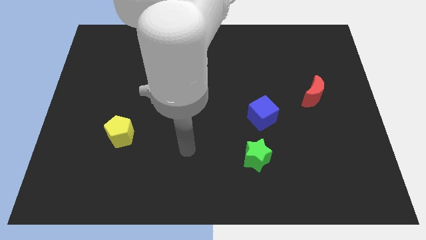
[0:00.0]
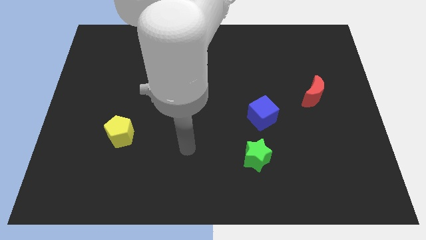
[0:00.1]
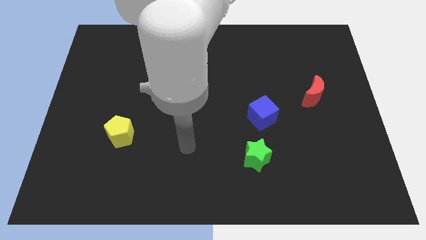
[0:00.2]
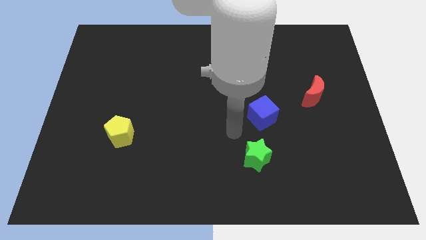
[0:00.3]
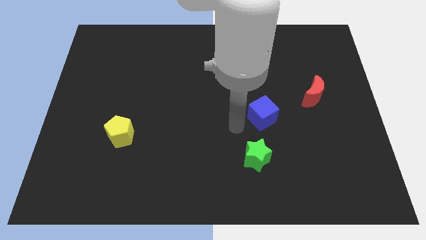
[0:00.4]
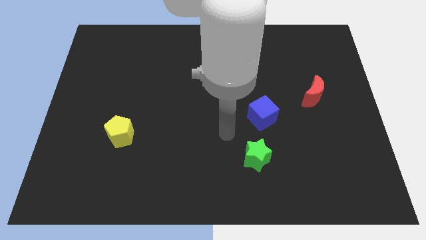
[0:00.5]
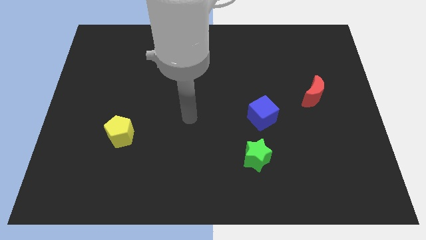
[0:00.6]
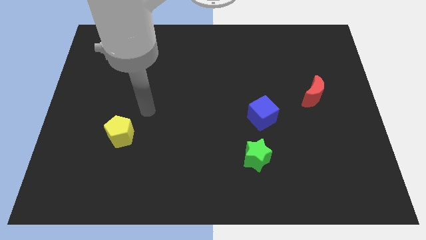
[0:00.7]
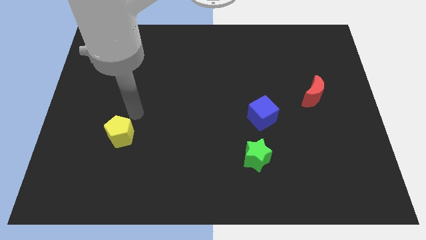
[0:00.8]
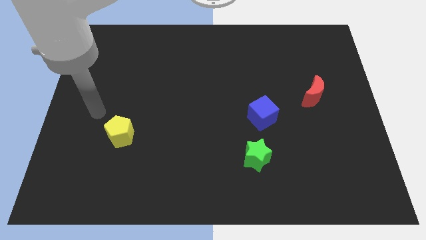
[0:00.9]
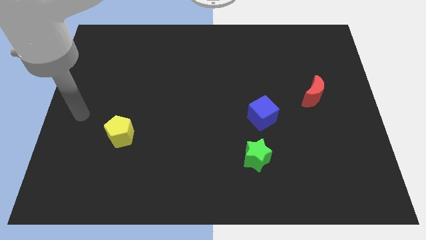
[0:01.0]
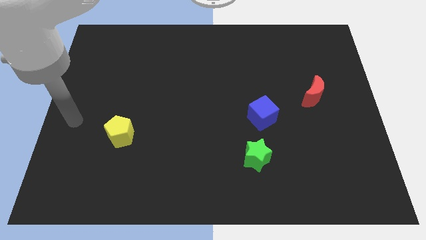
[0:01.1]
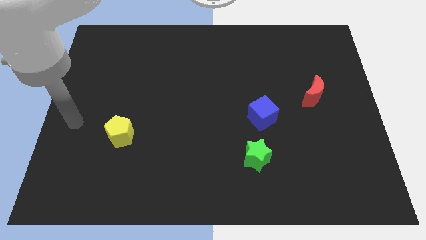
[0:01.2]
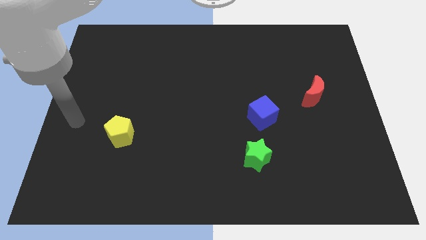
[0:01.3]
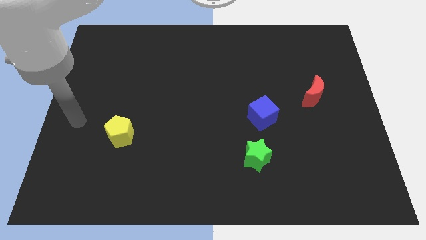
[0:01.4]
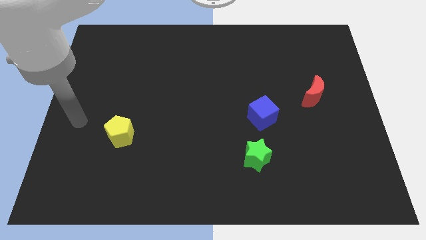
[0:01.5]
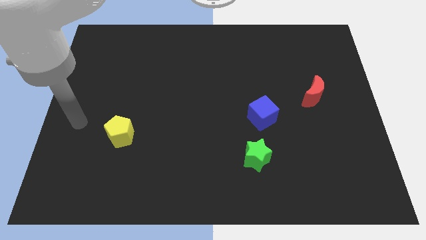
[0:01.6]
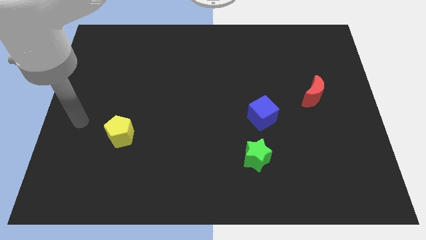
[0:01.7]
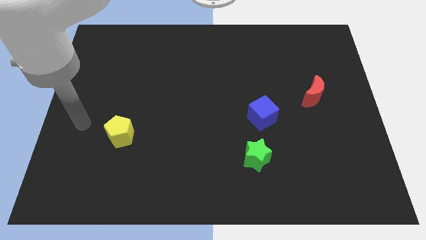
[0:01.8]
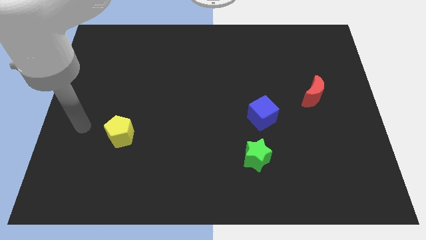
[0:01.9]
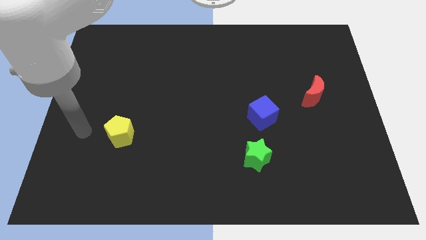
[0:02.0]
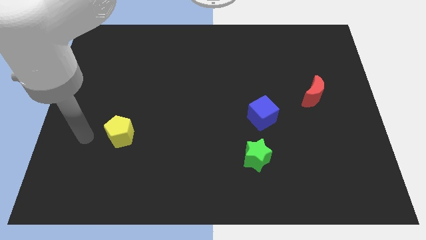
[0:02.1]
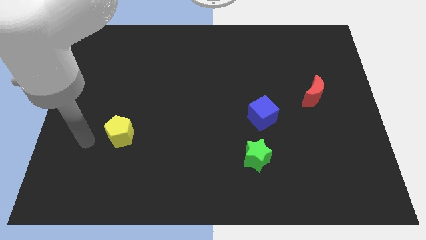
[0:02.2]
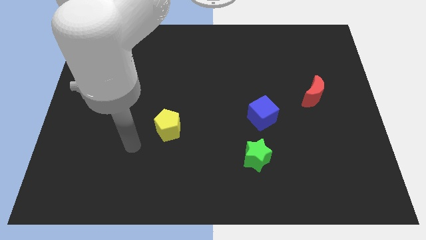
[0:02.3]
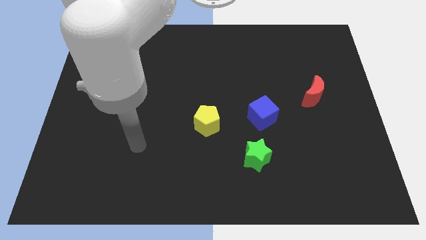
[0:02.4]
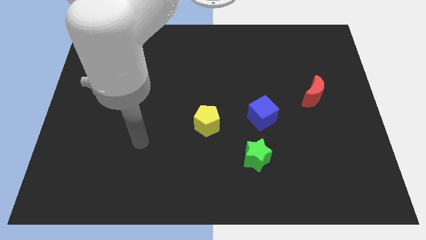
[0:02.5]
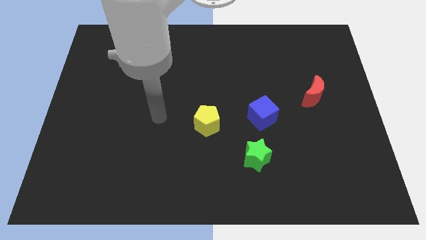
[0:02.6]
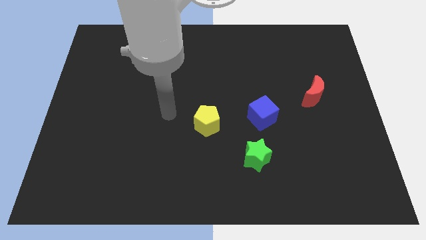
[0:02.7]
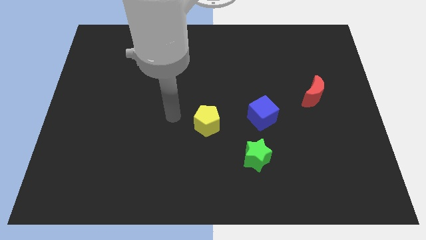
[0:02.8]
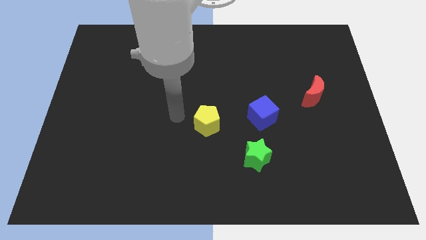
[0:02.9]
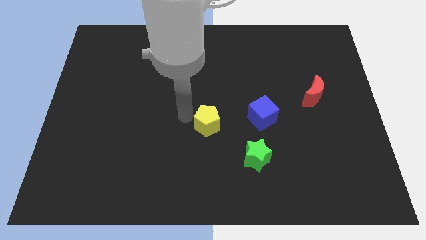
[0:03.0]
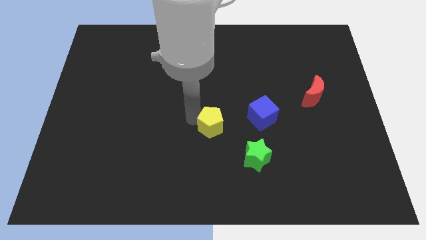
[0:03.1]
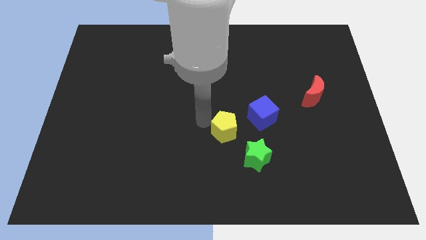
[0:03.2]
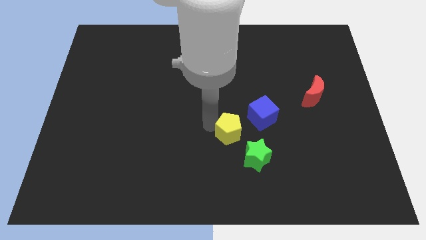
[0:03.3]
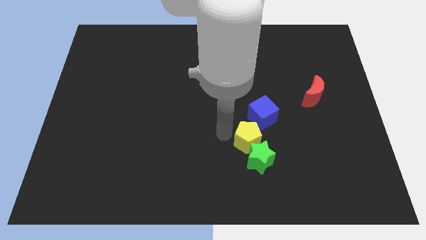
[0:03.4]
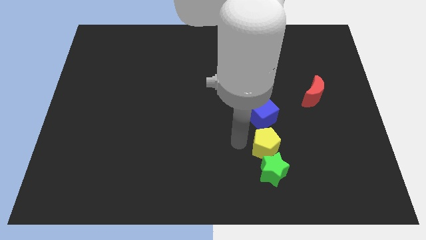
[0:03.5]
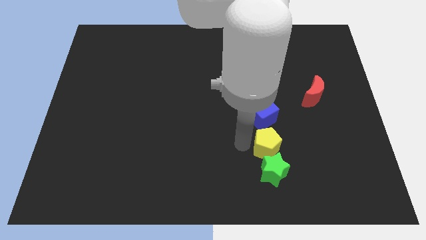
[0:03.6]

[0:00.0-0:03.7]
slide the yellow pentagon to the green block

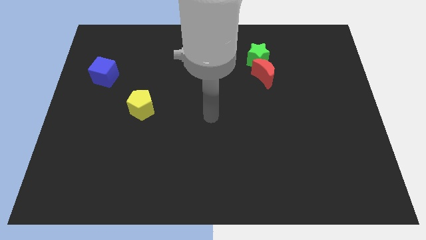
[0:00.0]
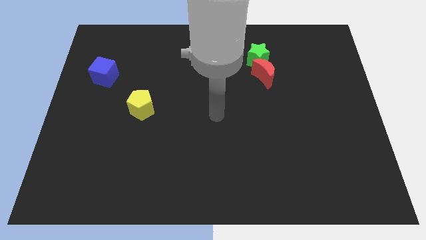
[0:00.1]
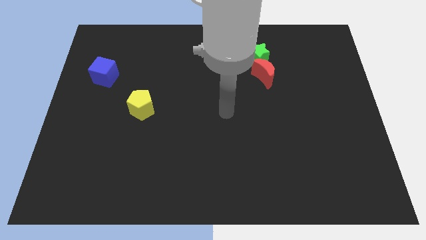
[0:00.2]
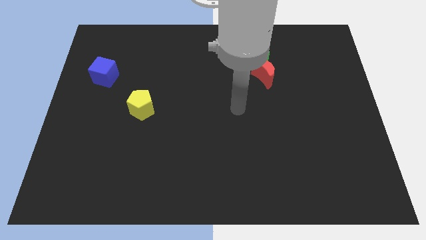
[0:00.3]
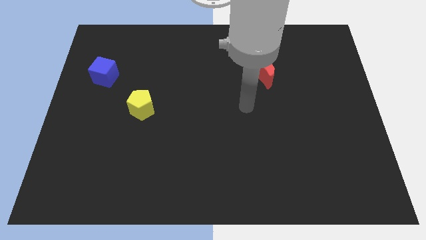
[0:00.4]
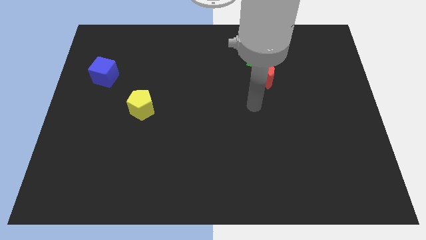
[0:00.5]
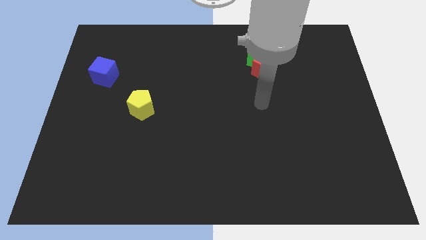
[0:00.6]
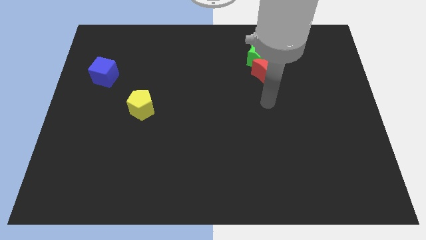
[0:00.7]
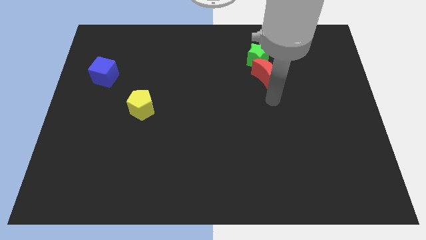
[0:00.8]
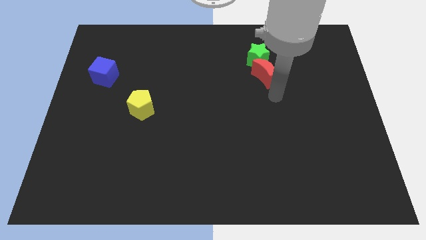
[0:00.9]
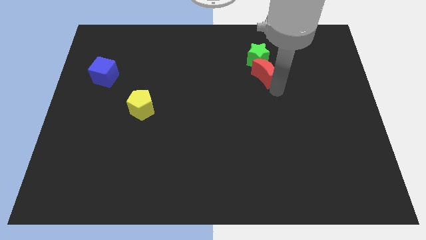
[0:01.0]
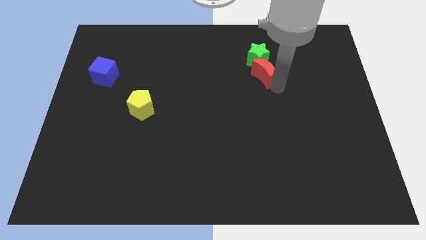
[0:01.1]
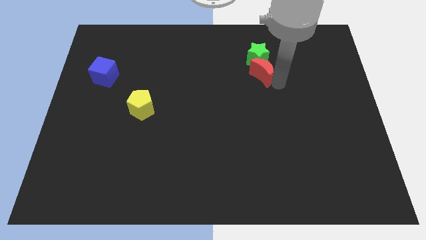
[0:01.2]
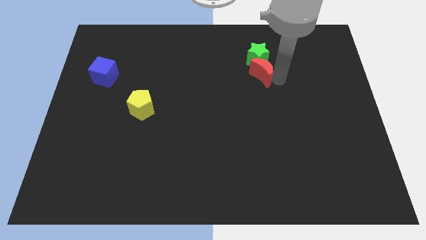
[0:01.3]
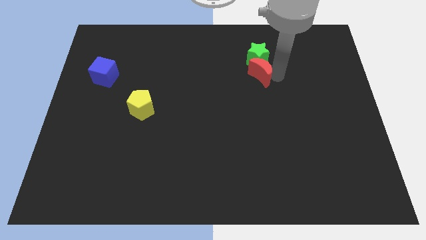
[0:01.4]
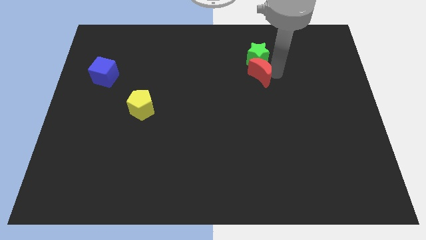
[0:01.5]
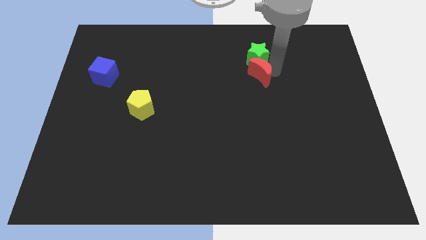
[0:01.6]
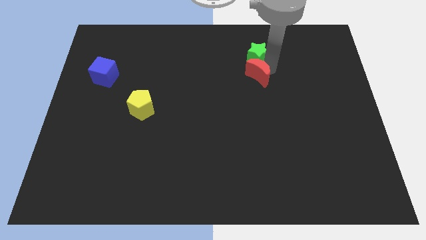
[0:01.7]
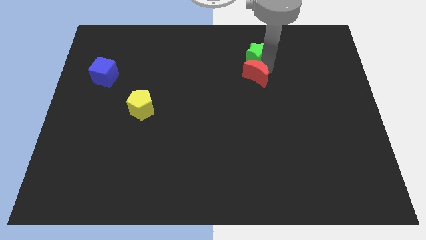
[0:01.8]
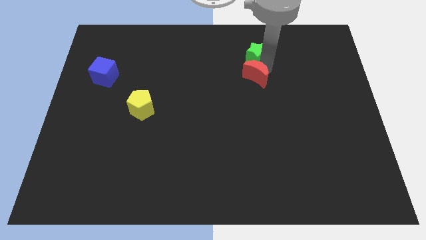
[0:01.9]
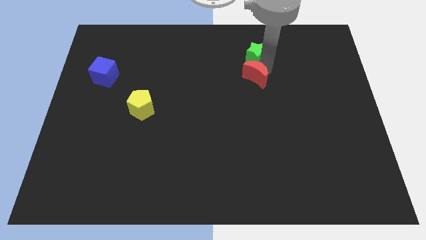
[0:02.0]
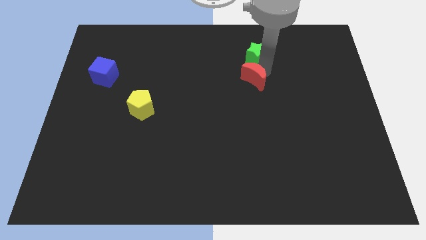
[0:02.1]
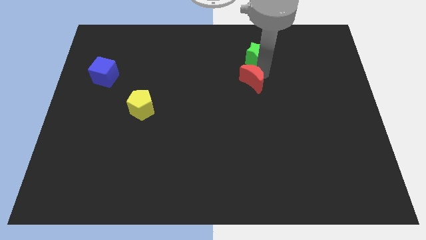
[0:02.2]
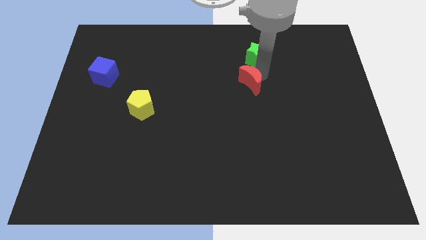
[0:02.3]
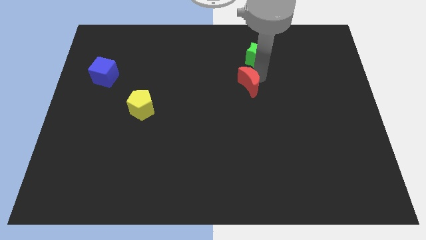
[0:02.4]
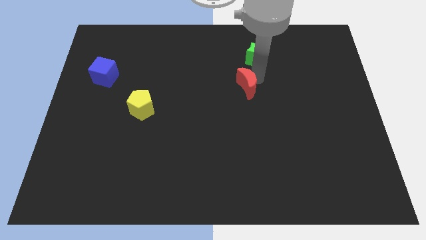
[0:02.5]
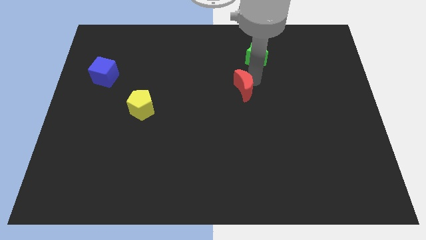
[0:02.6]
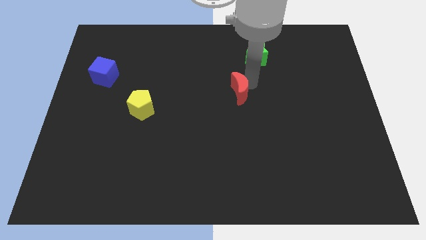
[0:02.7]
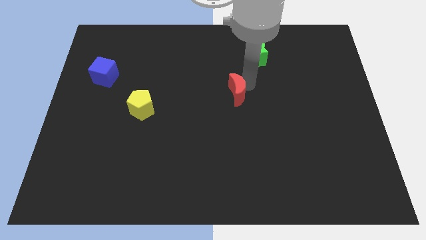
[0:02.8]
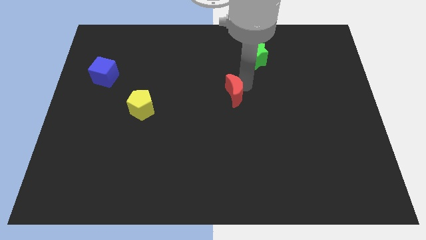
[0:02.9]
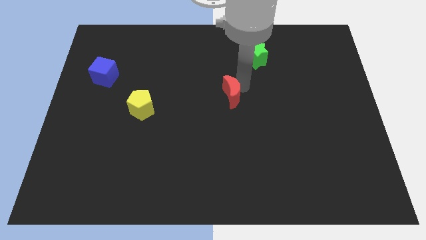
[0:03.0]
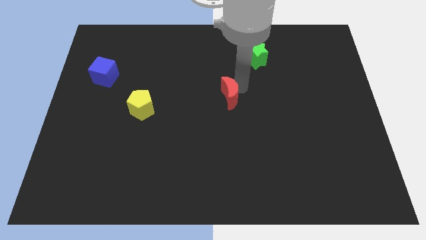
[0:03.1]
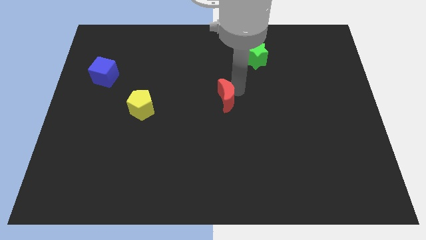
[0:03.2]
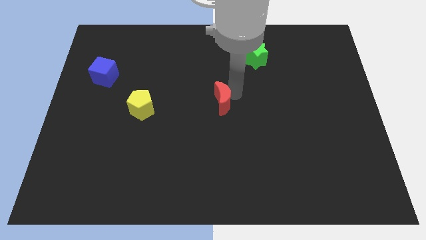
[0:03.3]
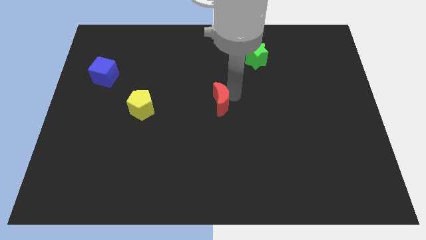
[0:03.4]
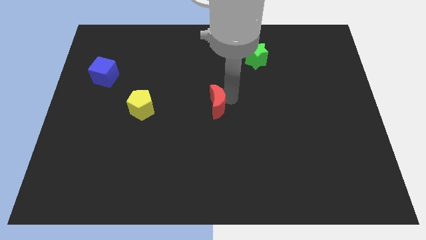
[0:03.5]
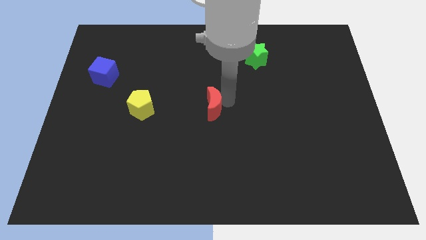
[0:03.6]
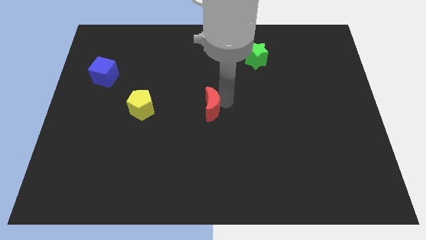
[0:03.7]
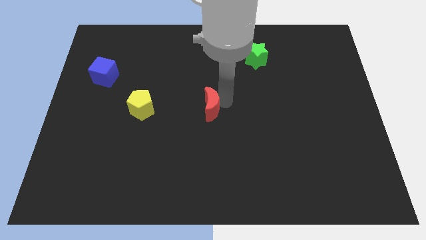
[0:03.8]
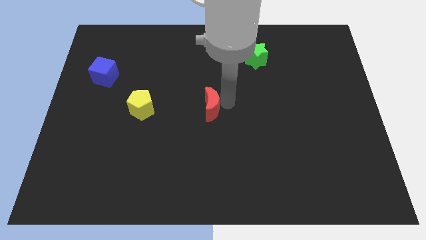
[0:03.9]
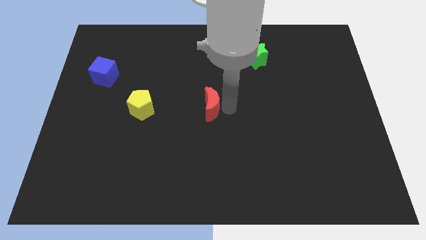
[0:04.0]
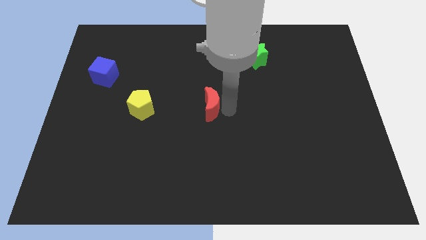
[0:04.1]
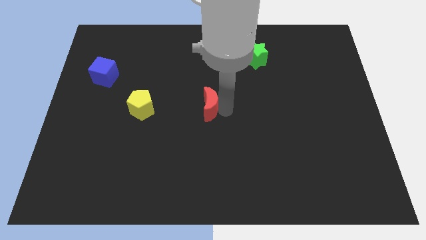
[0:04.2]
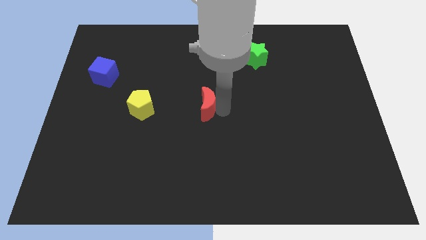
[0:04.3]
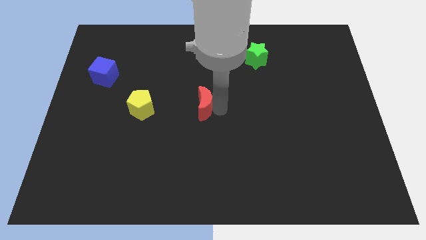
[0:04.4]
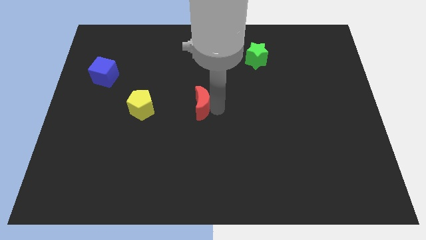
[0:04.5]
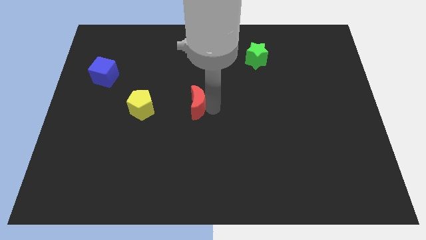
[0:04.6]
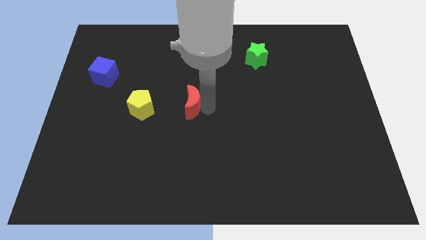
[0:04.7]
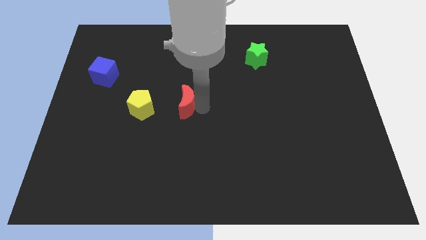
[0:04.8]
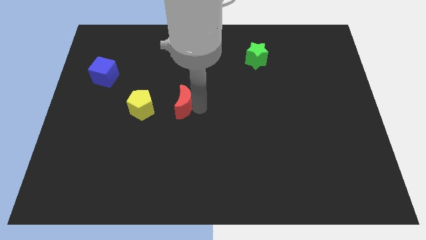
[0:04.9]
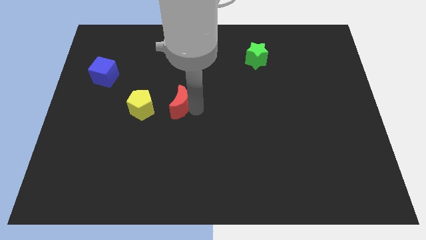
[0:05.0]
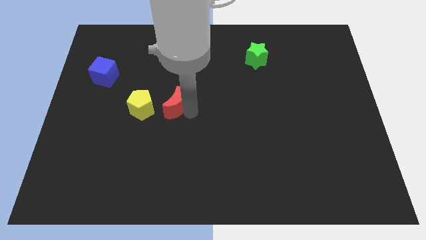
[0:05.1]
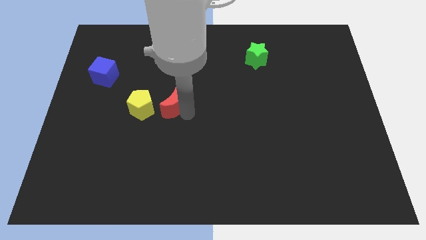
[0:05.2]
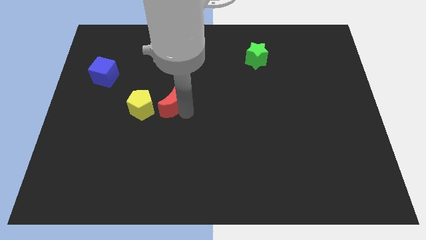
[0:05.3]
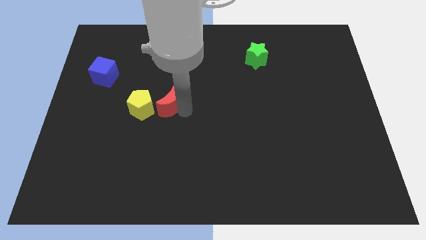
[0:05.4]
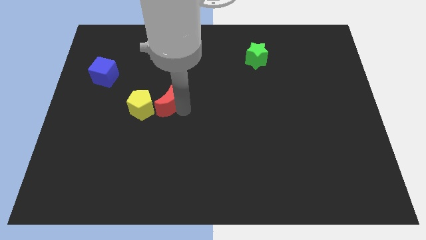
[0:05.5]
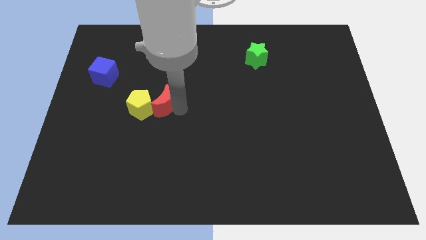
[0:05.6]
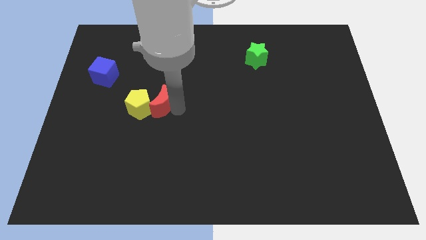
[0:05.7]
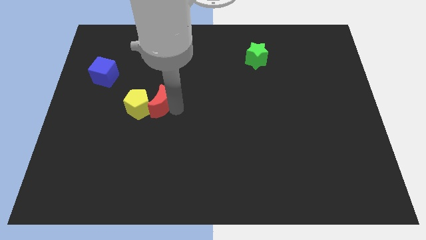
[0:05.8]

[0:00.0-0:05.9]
move the red moon towards the pentagon
